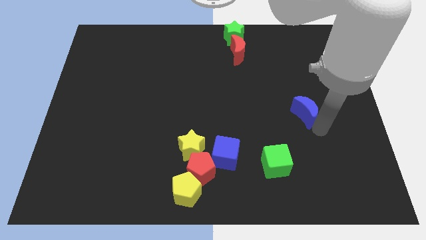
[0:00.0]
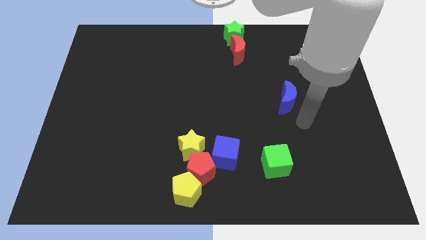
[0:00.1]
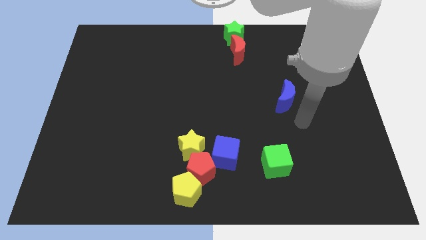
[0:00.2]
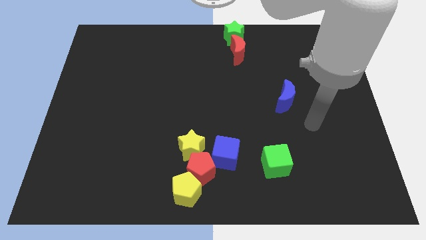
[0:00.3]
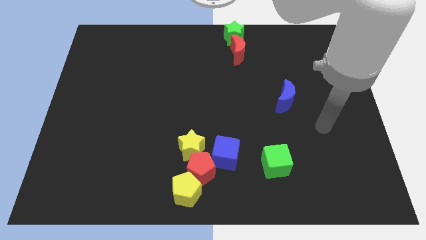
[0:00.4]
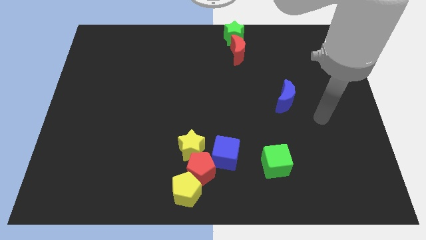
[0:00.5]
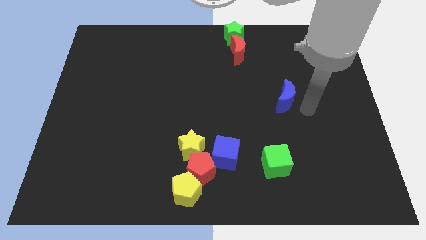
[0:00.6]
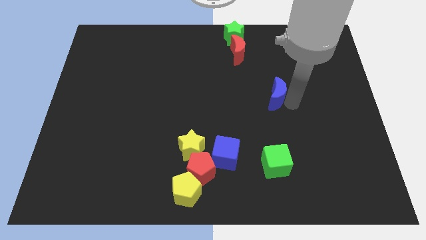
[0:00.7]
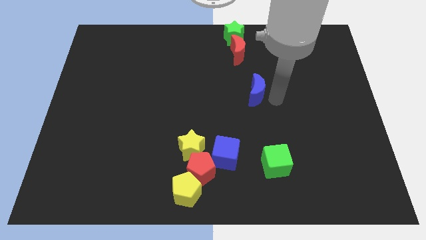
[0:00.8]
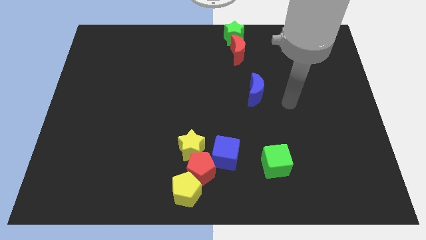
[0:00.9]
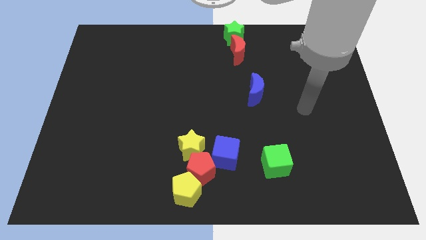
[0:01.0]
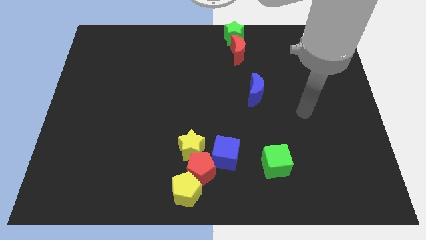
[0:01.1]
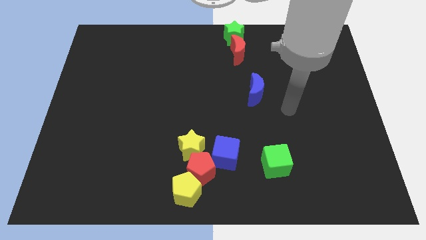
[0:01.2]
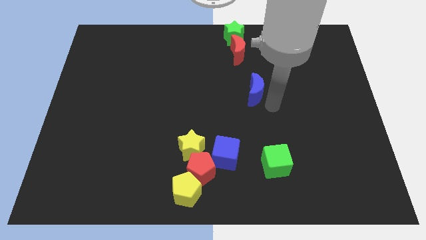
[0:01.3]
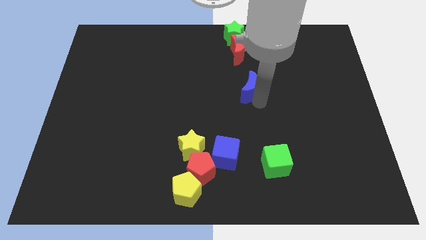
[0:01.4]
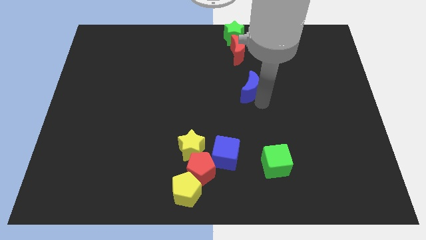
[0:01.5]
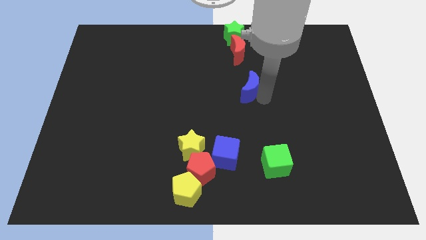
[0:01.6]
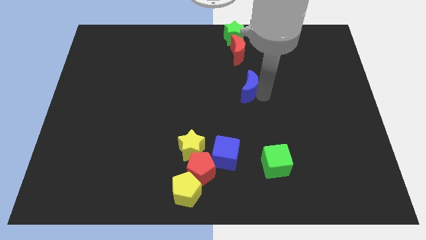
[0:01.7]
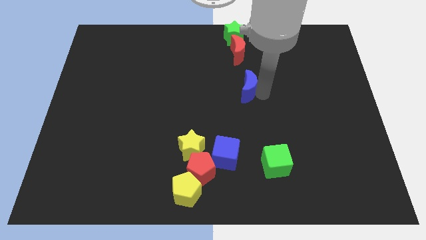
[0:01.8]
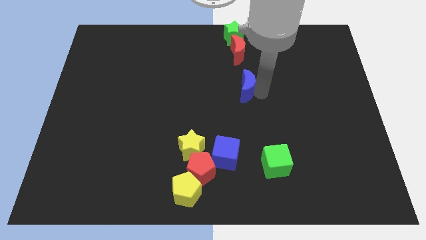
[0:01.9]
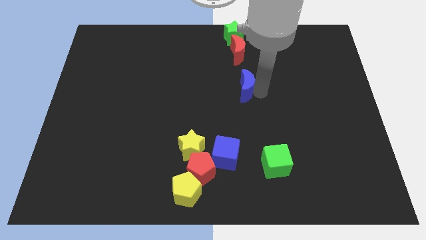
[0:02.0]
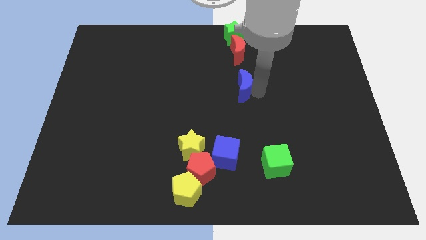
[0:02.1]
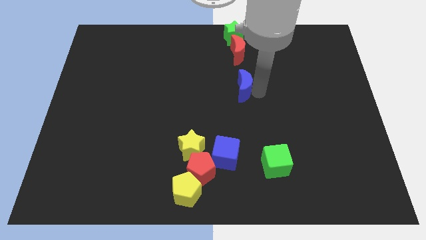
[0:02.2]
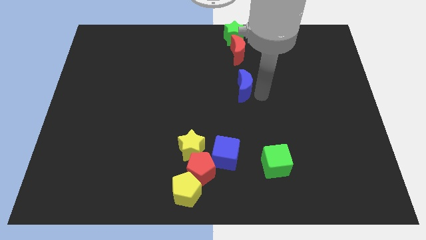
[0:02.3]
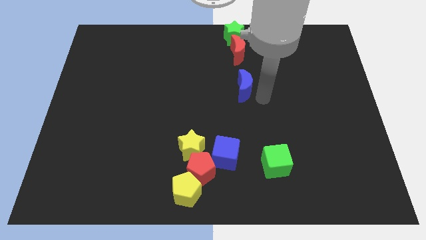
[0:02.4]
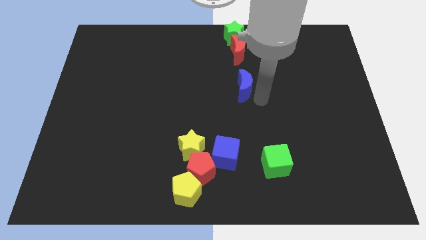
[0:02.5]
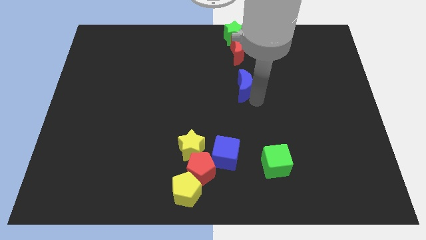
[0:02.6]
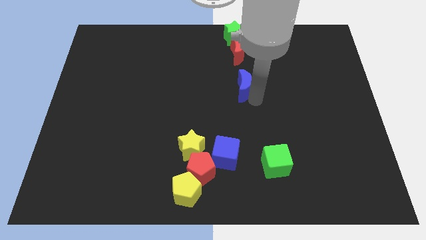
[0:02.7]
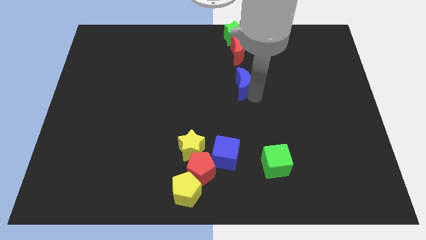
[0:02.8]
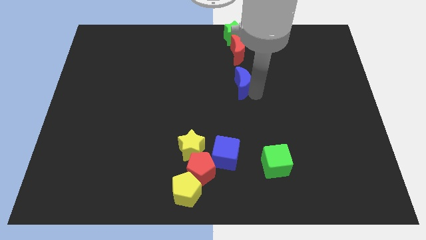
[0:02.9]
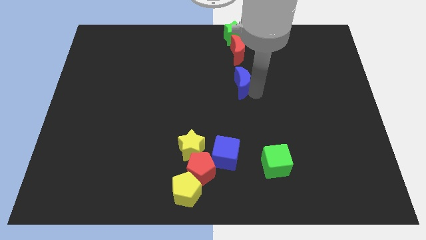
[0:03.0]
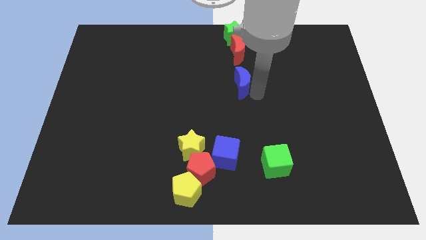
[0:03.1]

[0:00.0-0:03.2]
move the blue crescent to the bottom of the red crescent

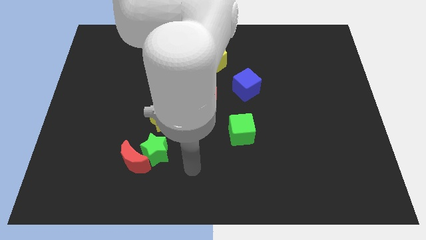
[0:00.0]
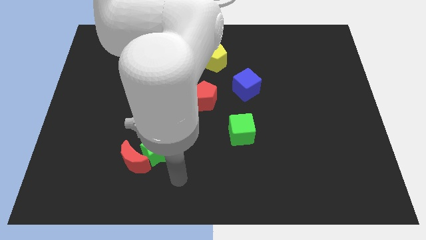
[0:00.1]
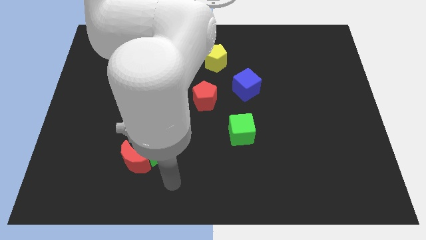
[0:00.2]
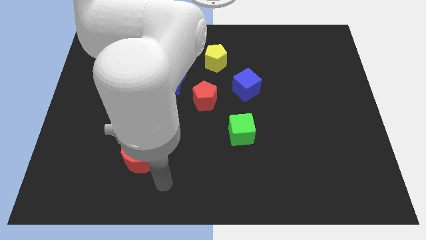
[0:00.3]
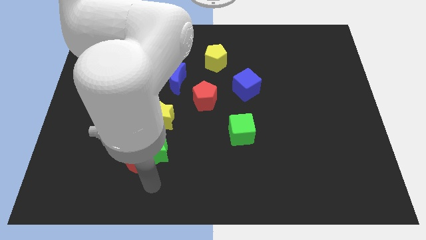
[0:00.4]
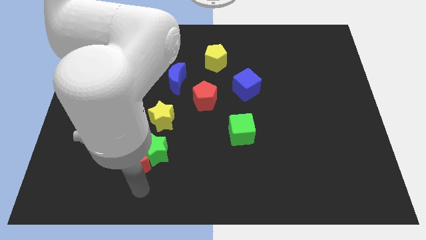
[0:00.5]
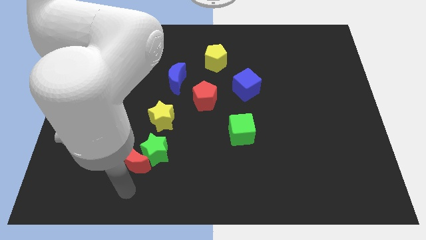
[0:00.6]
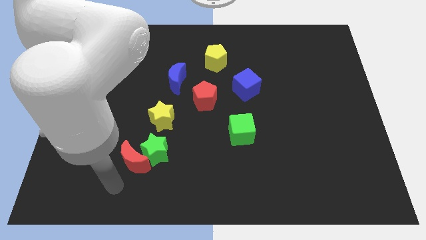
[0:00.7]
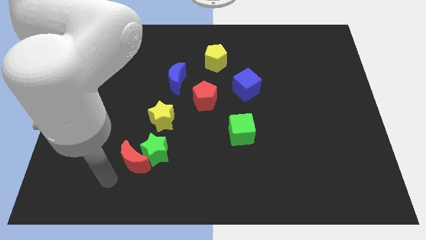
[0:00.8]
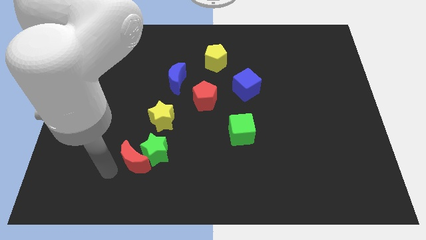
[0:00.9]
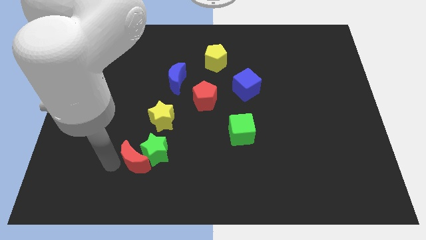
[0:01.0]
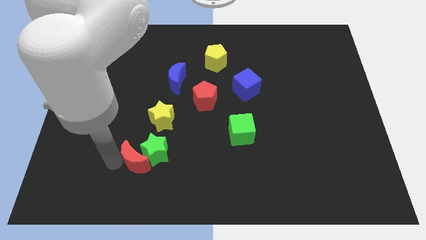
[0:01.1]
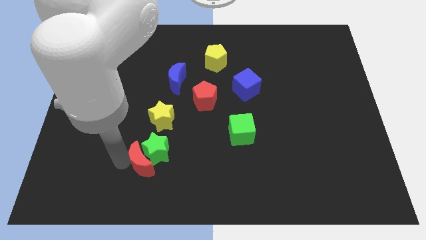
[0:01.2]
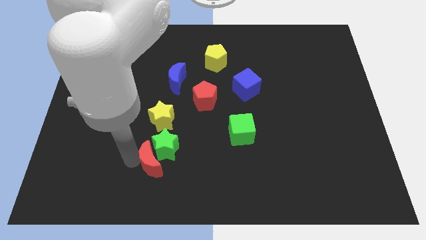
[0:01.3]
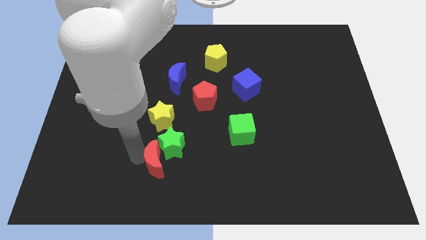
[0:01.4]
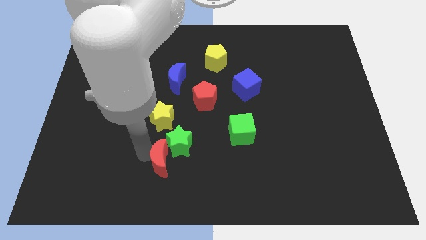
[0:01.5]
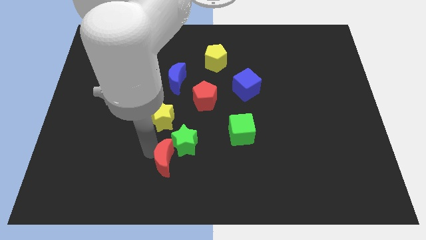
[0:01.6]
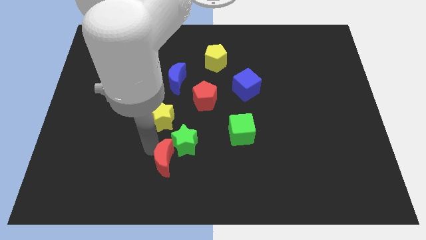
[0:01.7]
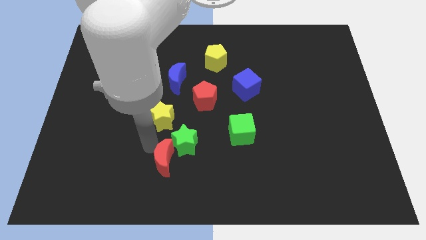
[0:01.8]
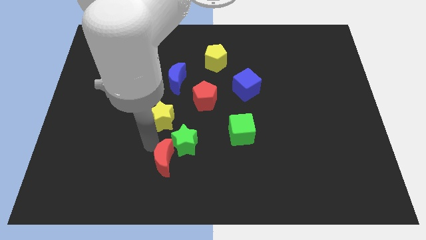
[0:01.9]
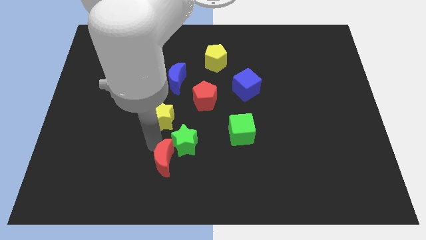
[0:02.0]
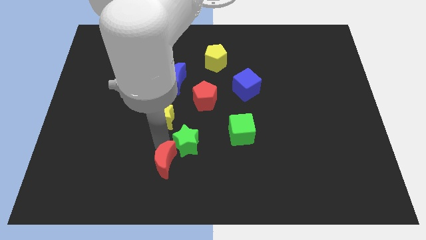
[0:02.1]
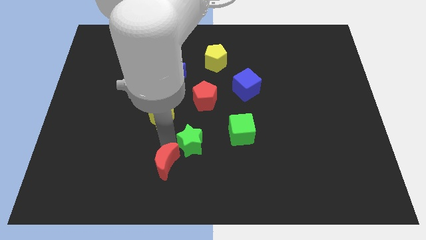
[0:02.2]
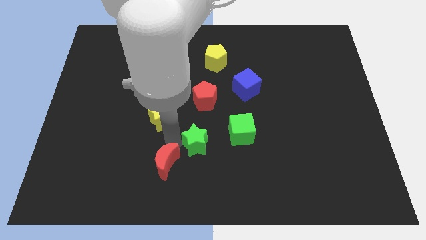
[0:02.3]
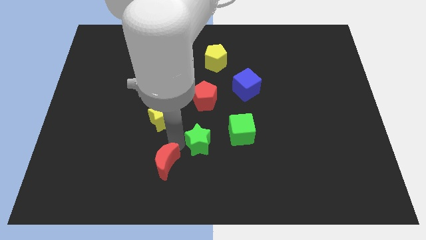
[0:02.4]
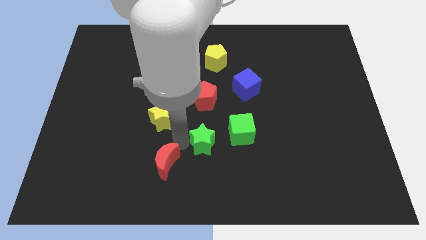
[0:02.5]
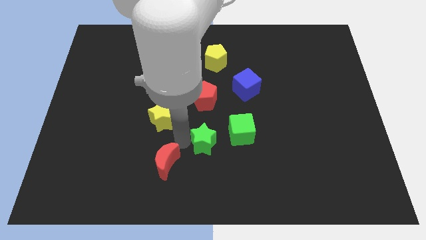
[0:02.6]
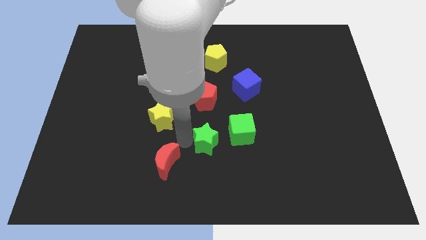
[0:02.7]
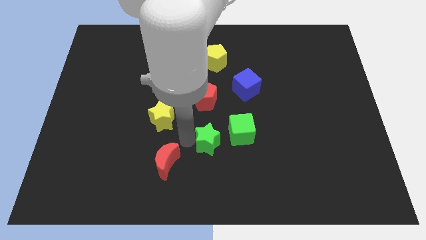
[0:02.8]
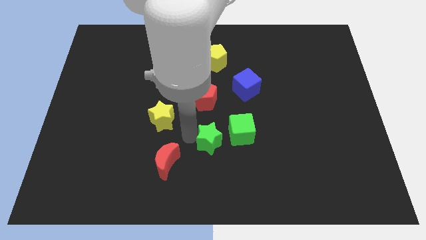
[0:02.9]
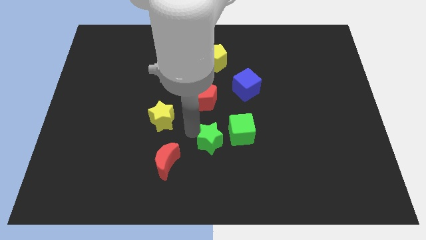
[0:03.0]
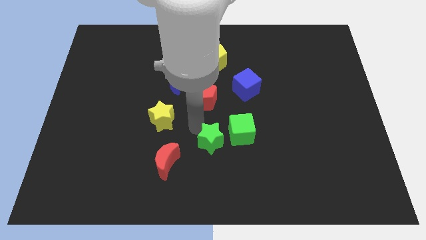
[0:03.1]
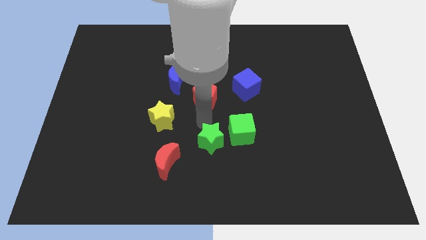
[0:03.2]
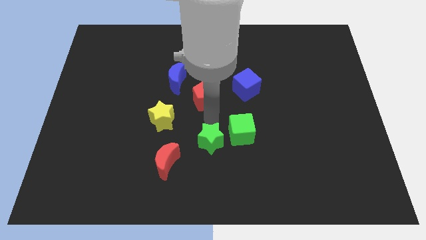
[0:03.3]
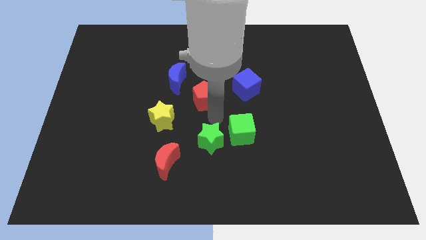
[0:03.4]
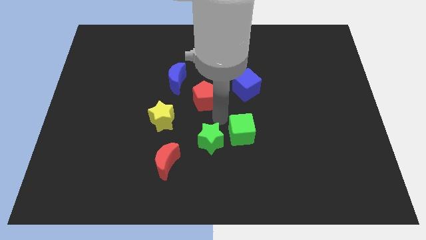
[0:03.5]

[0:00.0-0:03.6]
separate green star and the red moon

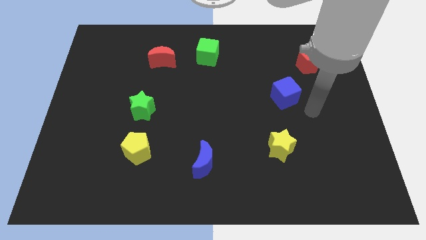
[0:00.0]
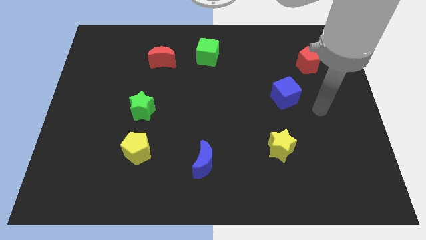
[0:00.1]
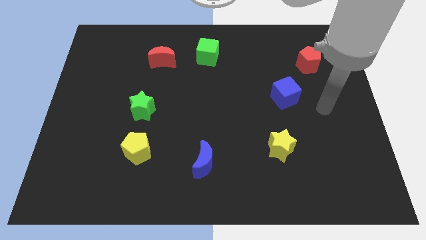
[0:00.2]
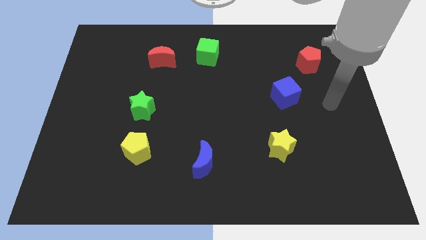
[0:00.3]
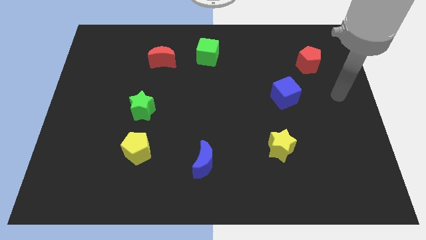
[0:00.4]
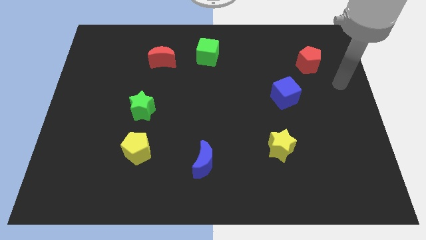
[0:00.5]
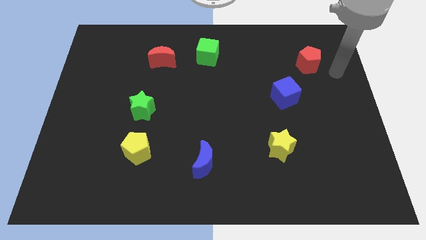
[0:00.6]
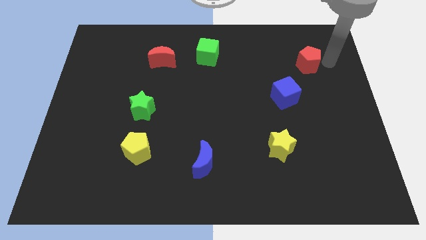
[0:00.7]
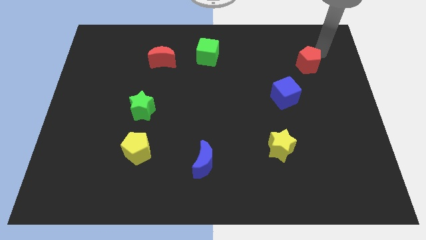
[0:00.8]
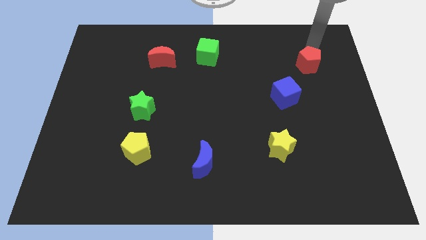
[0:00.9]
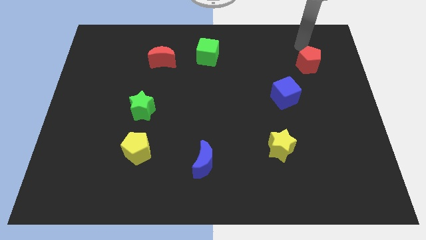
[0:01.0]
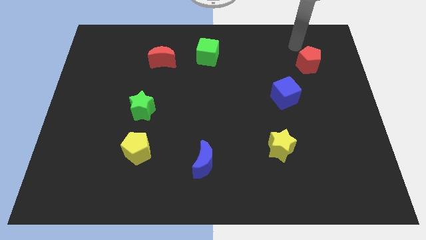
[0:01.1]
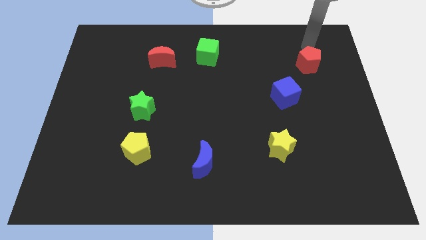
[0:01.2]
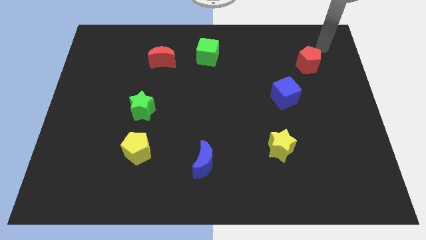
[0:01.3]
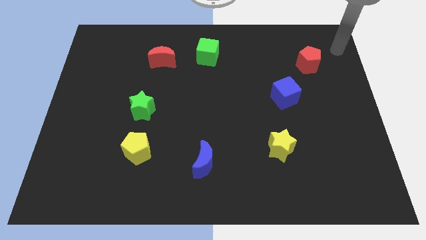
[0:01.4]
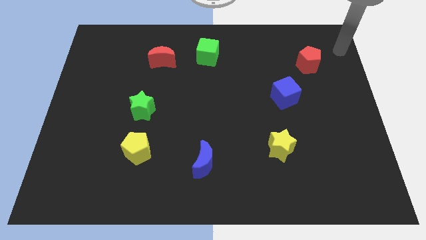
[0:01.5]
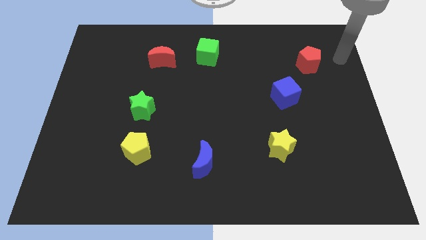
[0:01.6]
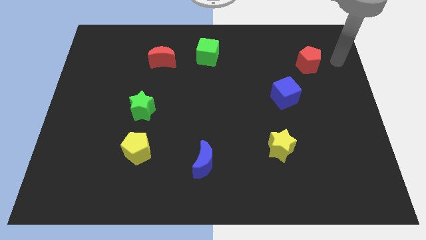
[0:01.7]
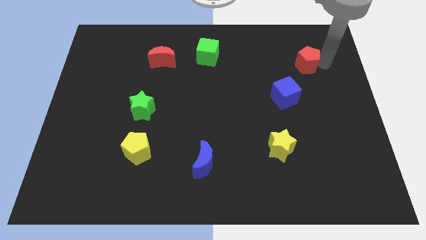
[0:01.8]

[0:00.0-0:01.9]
move your arm to the right side of the red crescent

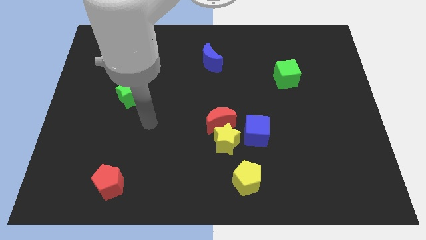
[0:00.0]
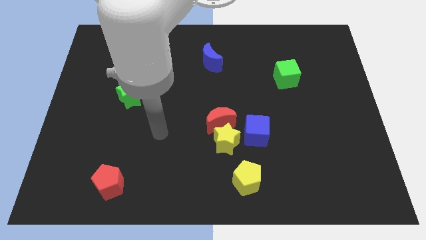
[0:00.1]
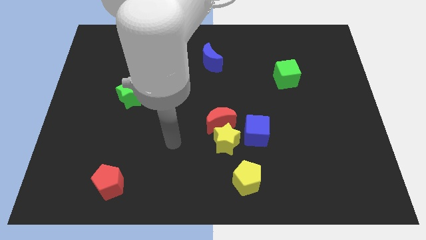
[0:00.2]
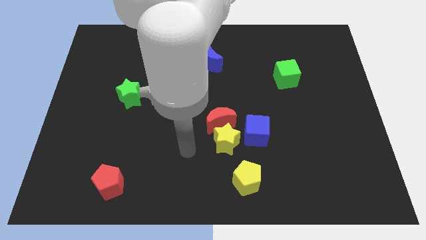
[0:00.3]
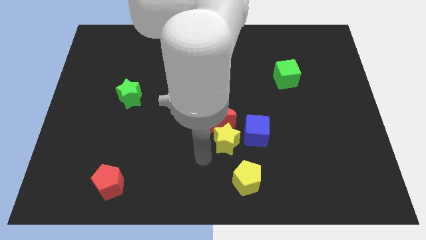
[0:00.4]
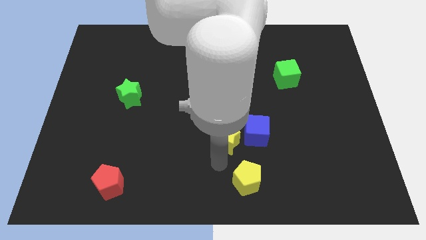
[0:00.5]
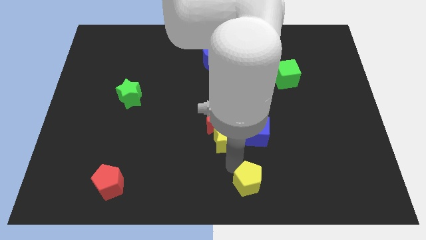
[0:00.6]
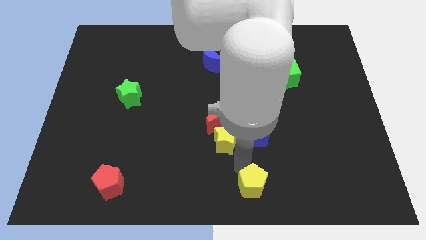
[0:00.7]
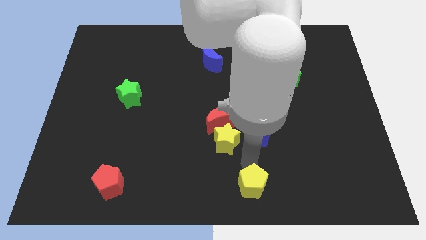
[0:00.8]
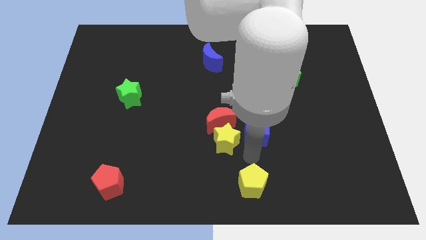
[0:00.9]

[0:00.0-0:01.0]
slightly move the yellow pentagon to the bottom of the board
